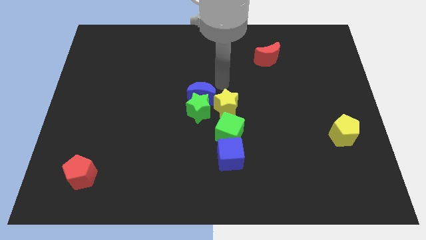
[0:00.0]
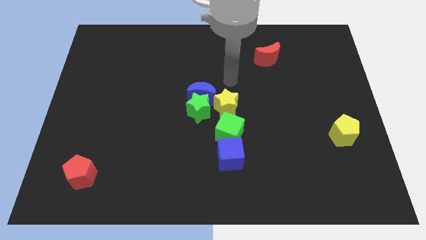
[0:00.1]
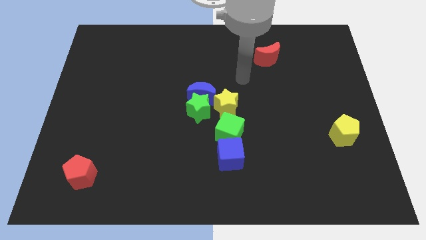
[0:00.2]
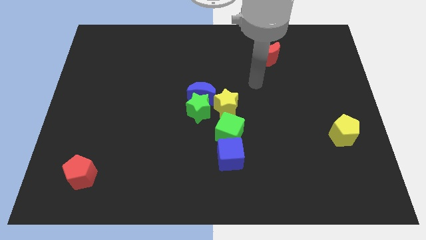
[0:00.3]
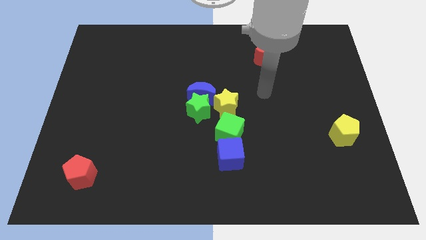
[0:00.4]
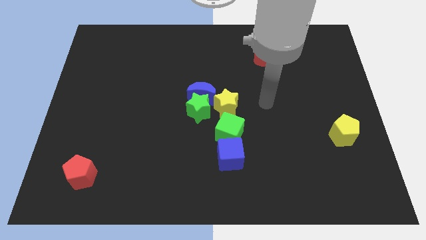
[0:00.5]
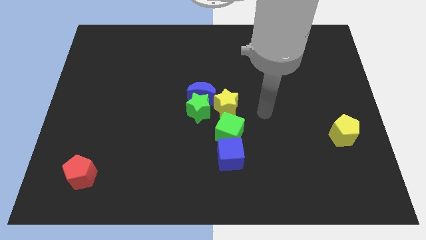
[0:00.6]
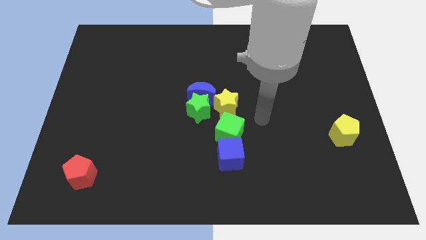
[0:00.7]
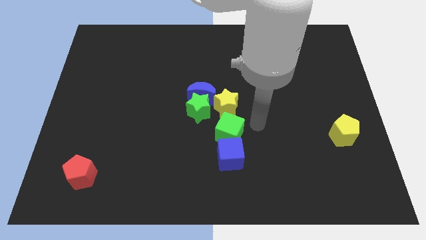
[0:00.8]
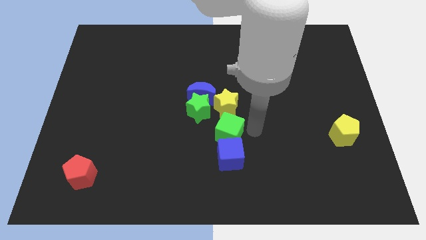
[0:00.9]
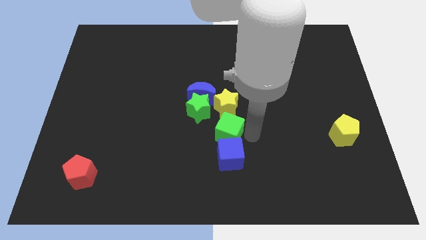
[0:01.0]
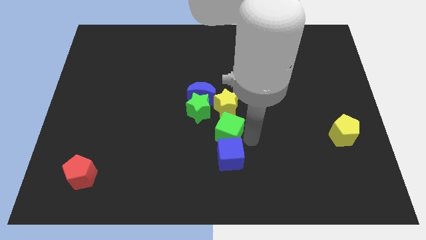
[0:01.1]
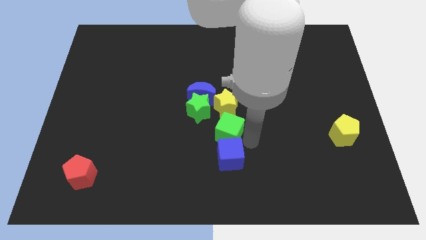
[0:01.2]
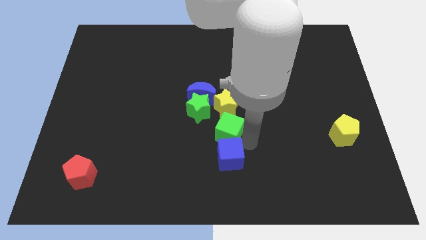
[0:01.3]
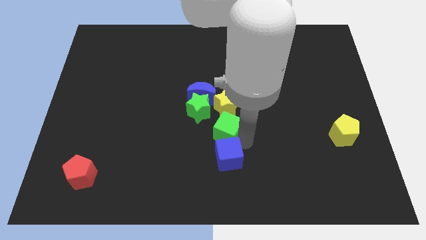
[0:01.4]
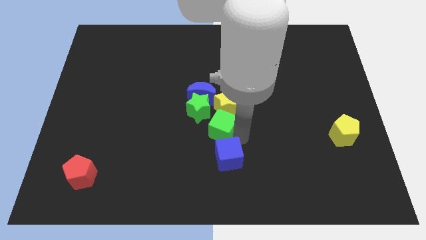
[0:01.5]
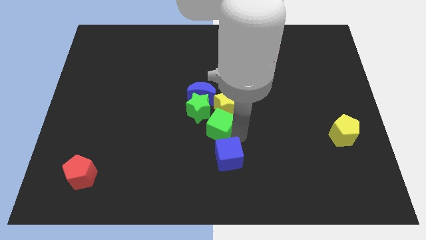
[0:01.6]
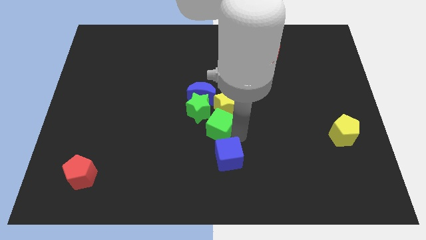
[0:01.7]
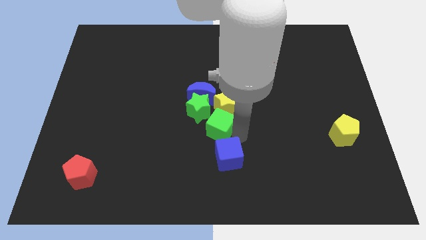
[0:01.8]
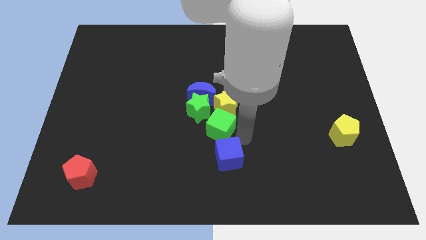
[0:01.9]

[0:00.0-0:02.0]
slightly move the green cube to the left

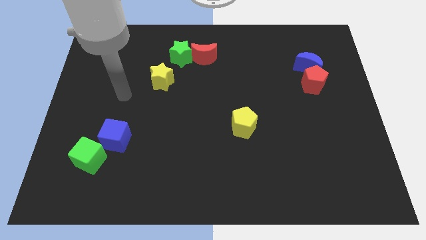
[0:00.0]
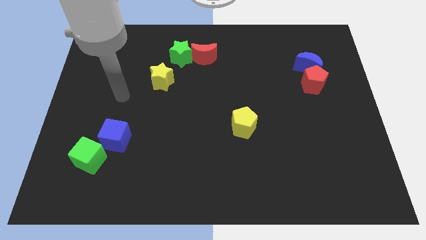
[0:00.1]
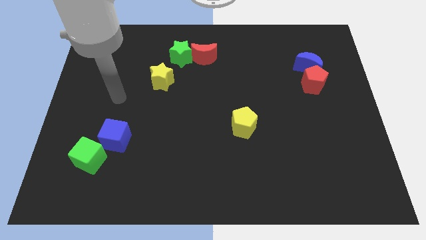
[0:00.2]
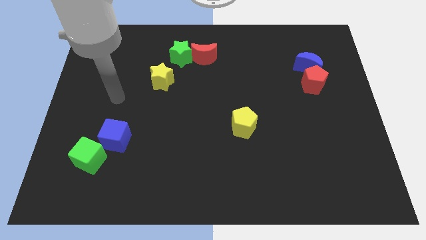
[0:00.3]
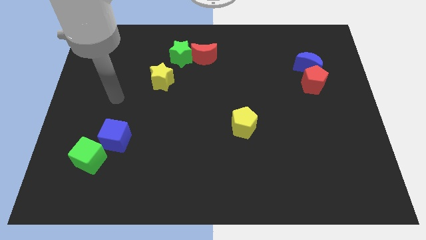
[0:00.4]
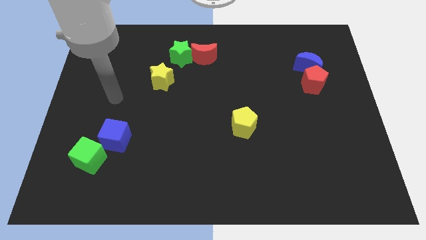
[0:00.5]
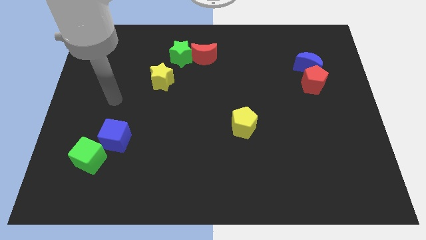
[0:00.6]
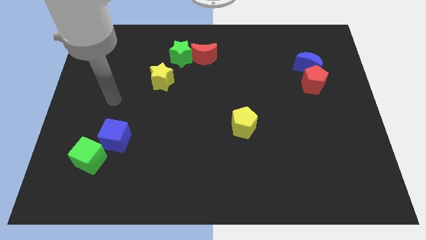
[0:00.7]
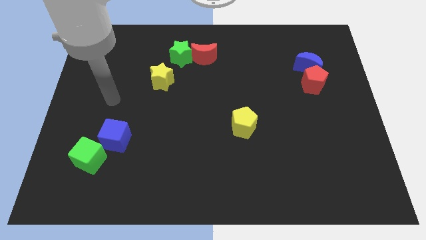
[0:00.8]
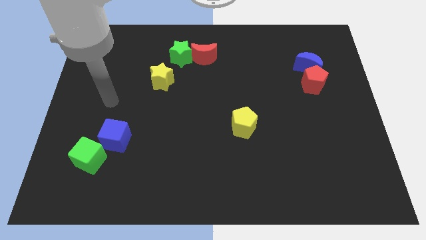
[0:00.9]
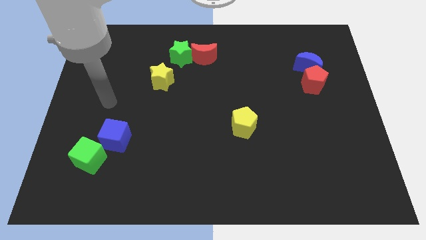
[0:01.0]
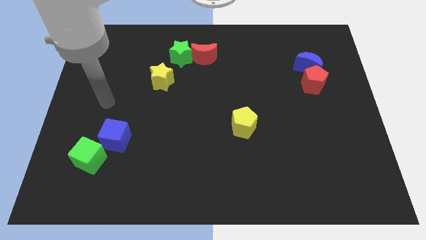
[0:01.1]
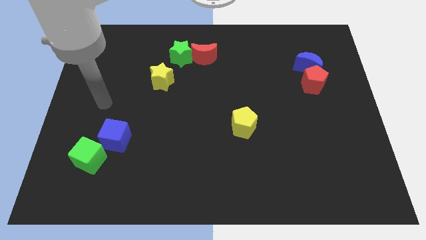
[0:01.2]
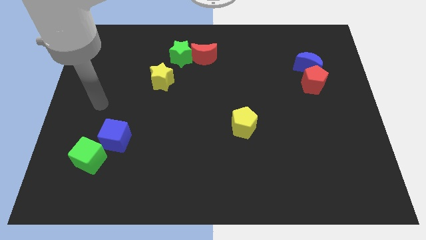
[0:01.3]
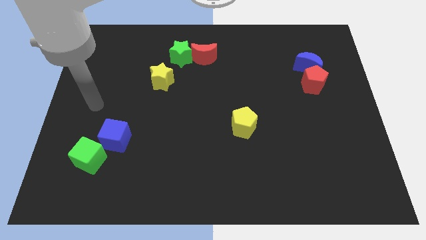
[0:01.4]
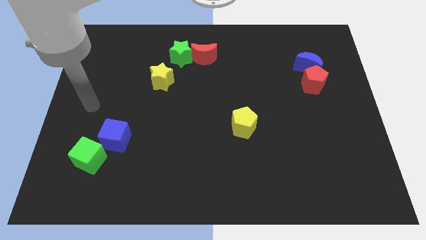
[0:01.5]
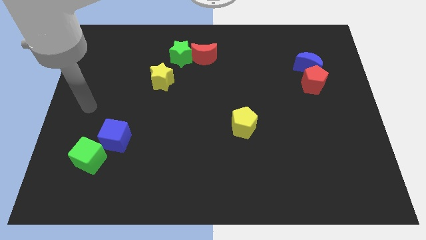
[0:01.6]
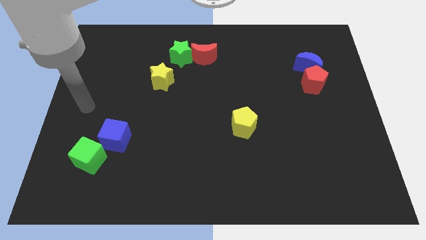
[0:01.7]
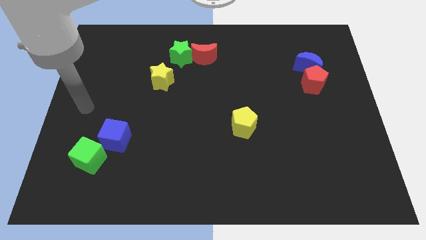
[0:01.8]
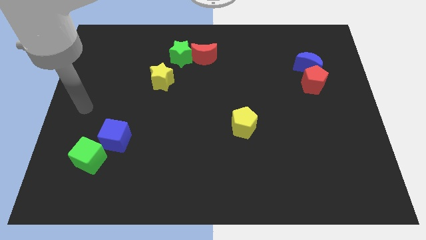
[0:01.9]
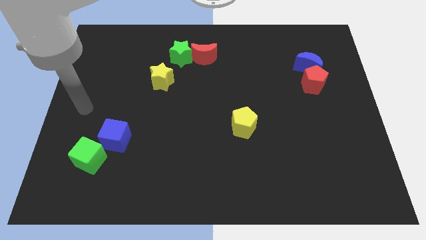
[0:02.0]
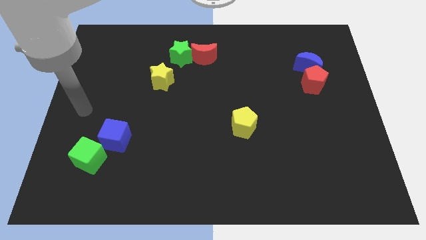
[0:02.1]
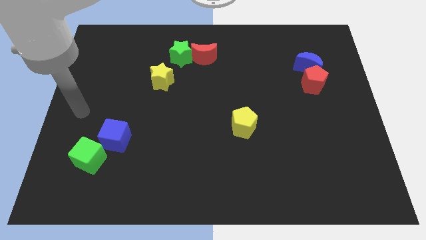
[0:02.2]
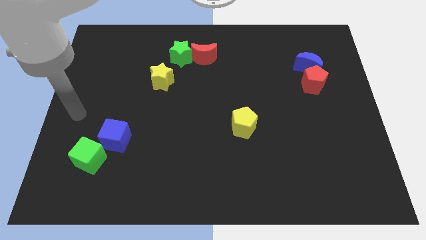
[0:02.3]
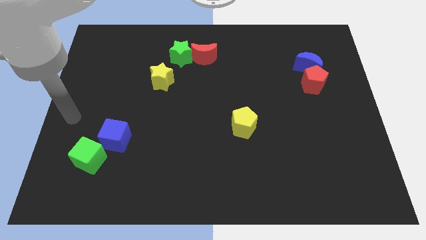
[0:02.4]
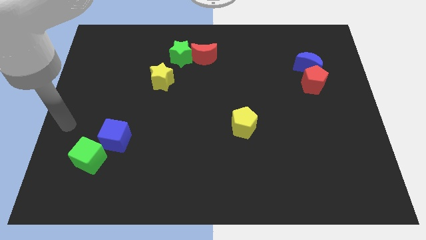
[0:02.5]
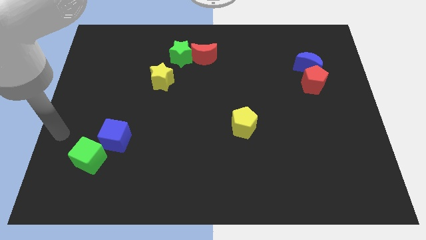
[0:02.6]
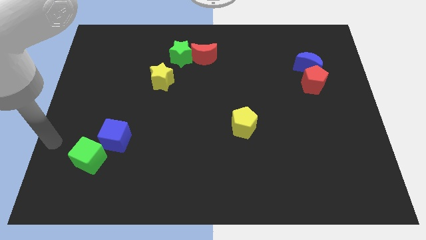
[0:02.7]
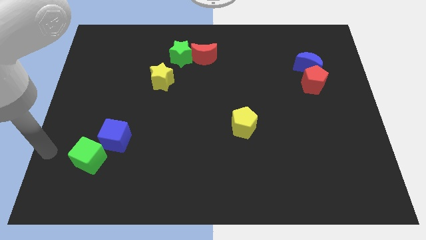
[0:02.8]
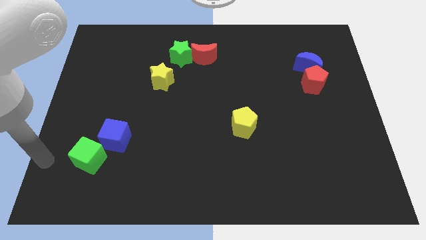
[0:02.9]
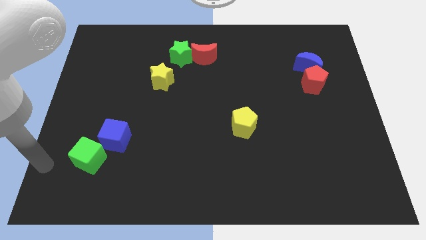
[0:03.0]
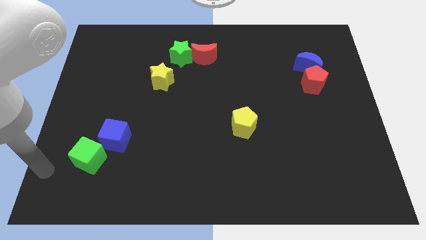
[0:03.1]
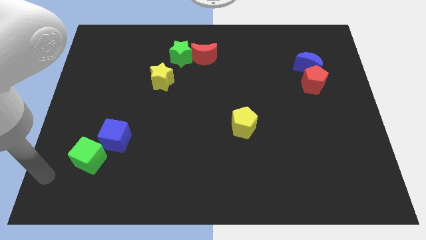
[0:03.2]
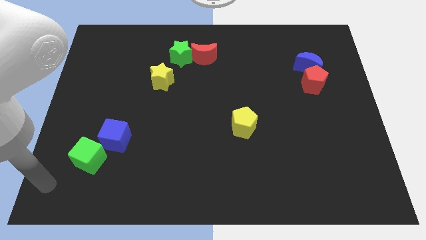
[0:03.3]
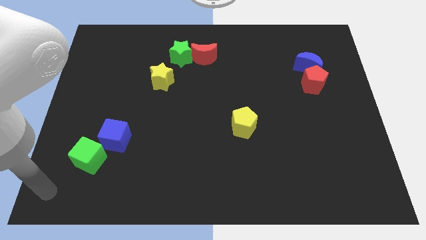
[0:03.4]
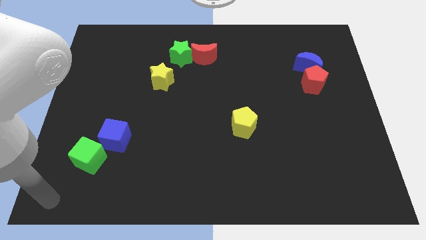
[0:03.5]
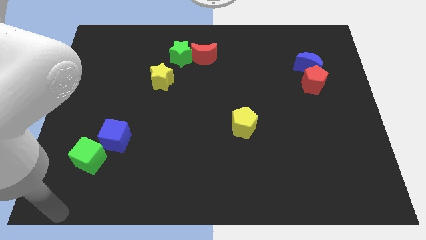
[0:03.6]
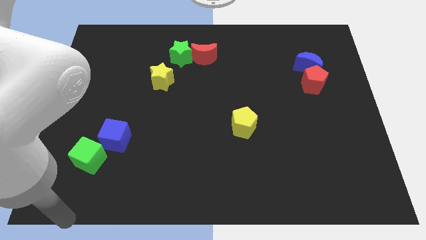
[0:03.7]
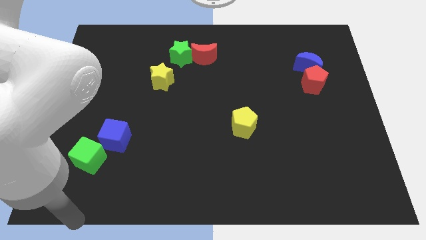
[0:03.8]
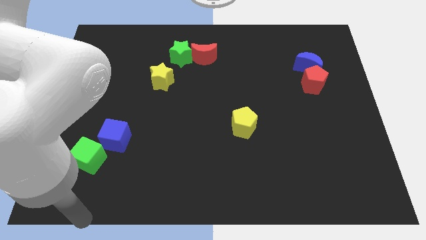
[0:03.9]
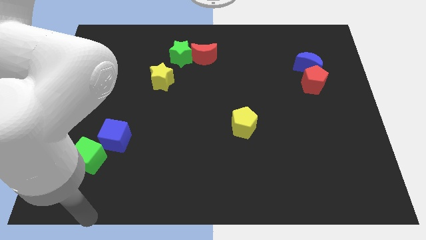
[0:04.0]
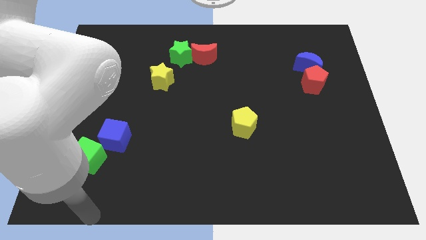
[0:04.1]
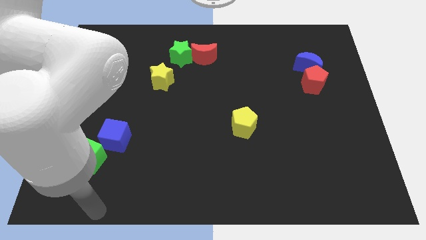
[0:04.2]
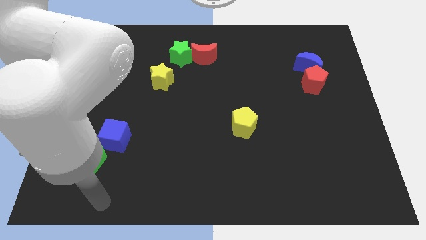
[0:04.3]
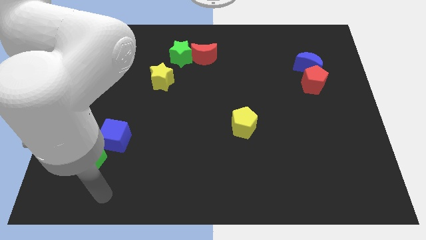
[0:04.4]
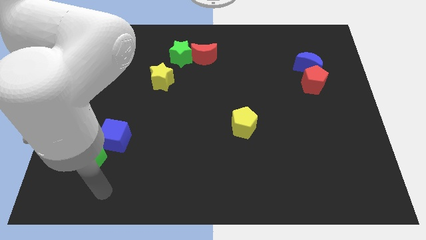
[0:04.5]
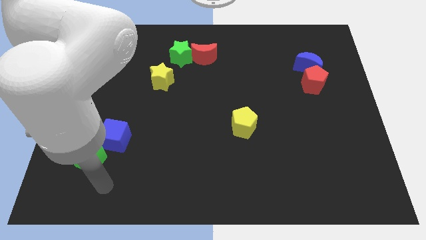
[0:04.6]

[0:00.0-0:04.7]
move the arm in a diagonal way below the green cube

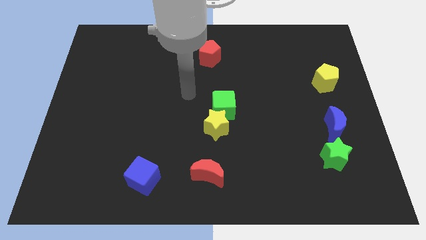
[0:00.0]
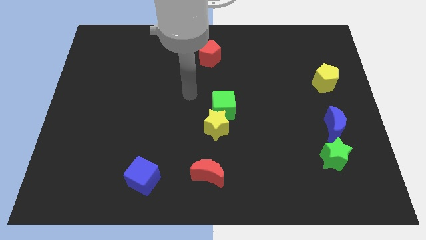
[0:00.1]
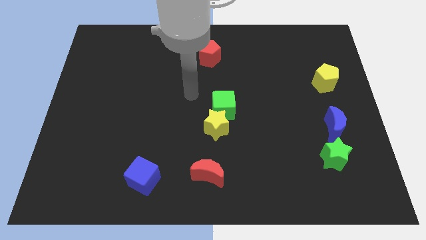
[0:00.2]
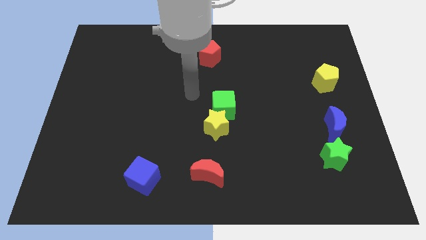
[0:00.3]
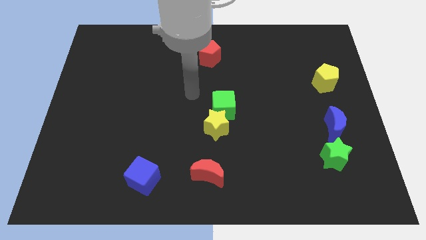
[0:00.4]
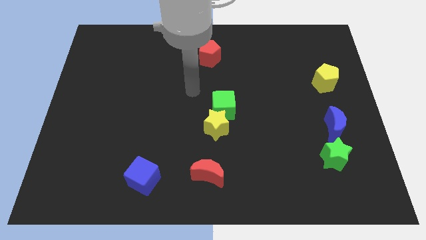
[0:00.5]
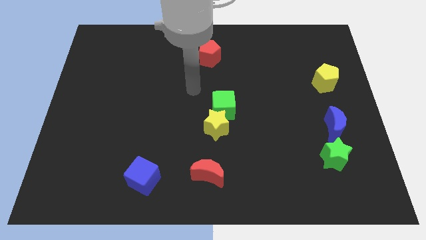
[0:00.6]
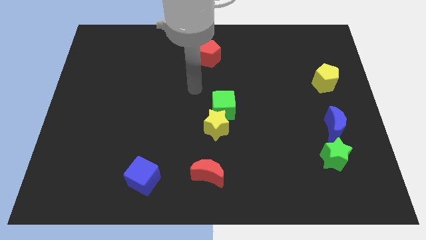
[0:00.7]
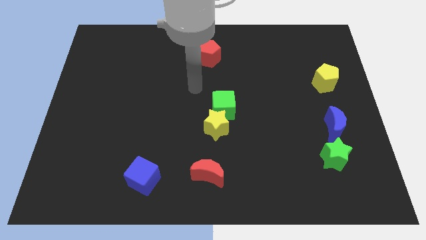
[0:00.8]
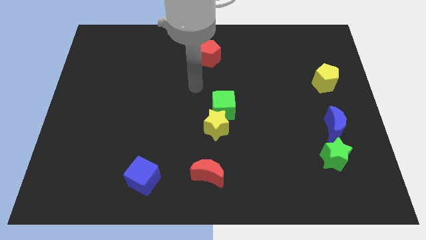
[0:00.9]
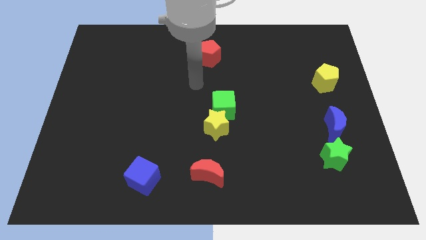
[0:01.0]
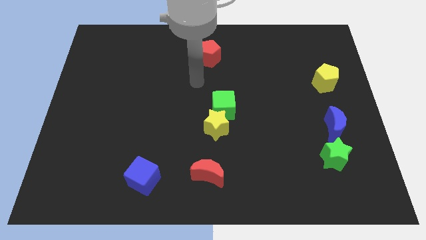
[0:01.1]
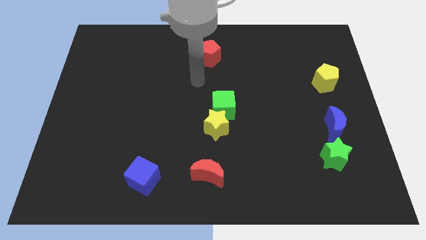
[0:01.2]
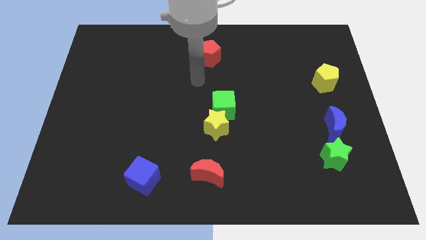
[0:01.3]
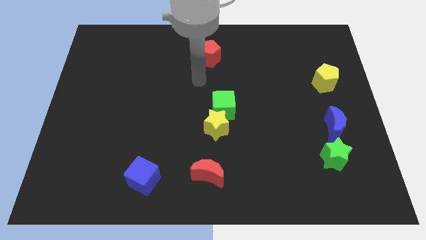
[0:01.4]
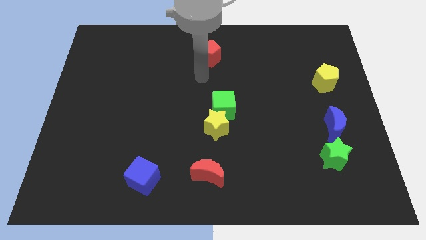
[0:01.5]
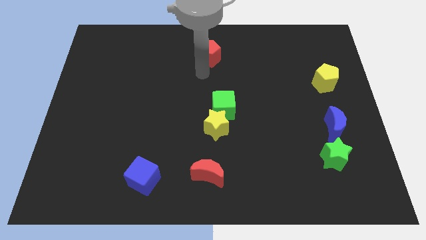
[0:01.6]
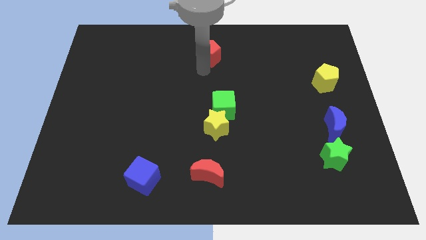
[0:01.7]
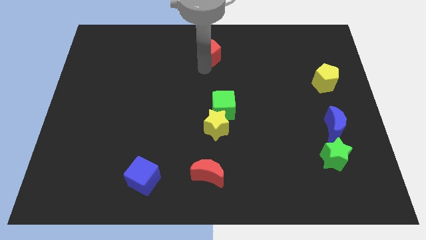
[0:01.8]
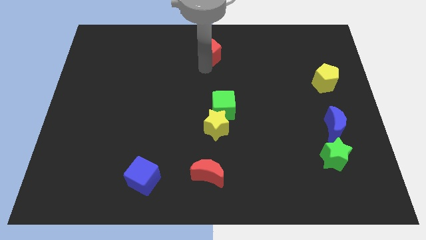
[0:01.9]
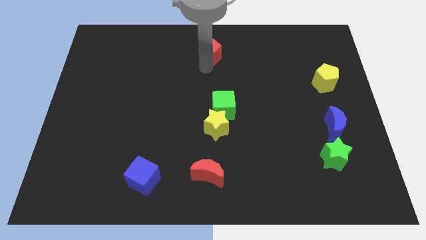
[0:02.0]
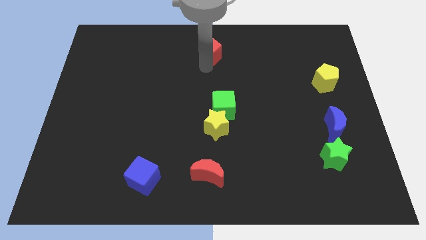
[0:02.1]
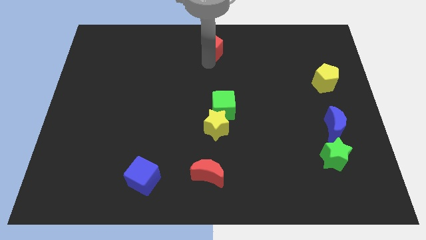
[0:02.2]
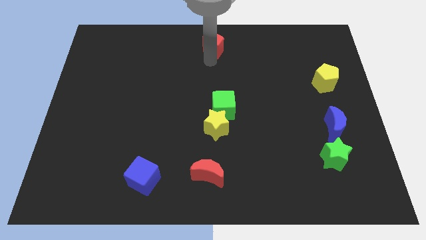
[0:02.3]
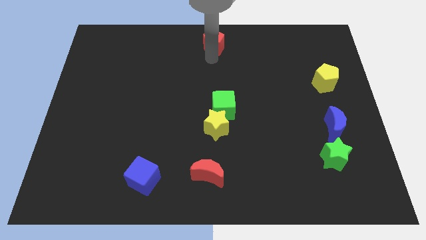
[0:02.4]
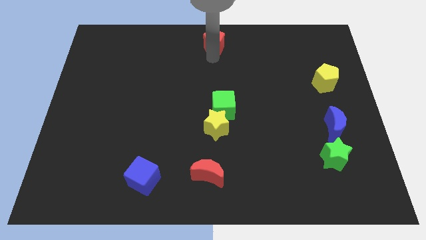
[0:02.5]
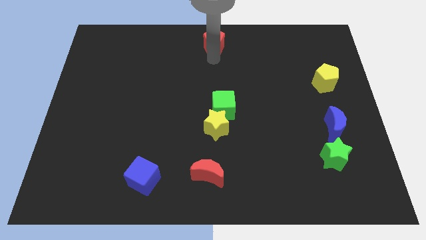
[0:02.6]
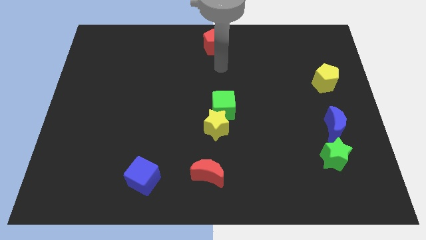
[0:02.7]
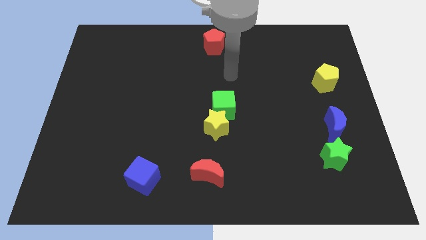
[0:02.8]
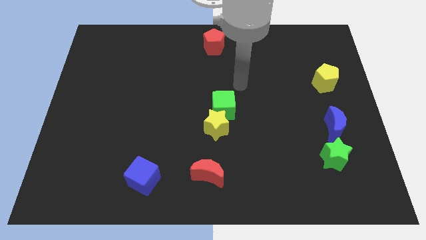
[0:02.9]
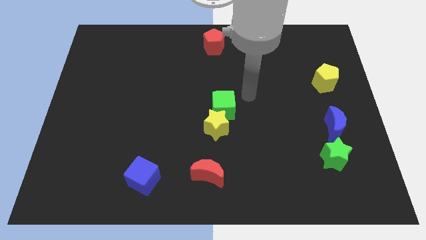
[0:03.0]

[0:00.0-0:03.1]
push the red pentagon to the top center of the board
